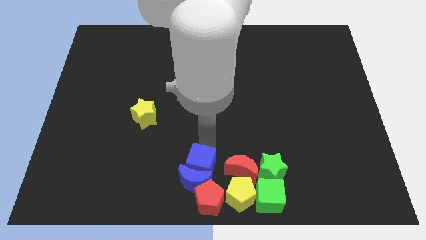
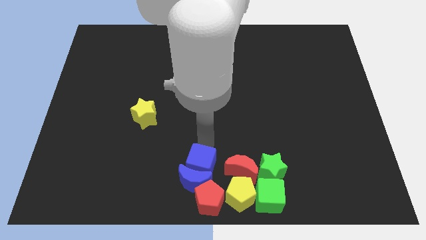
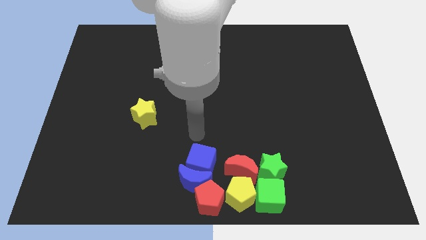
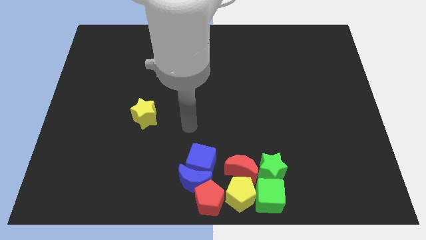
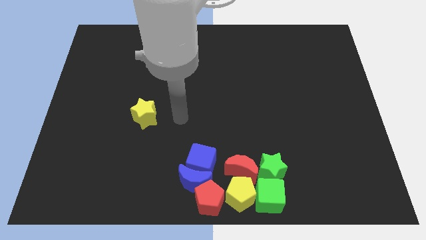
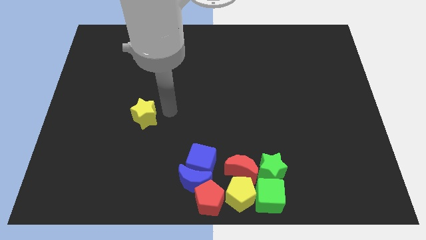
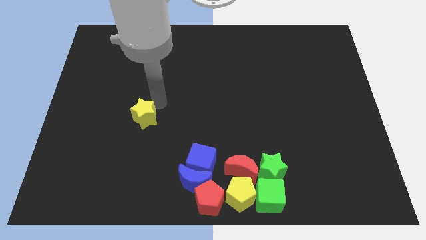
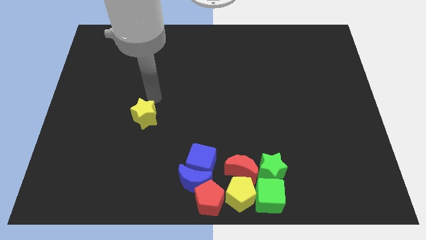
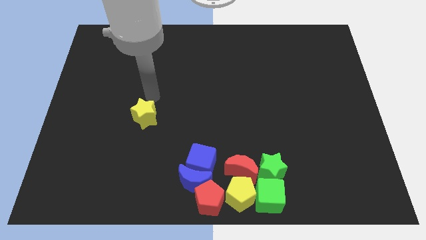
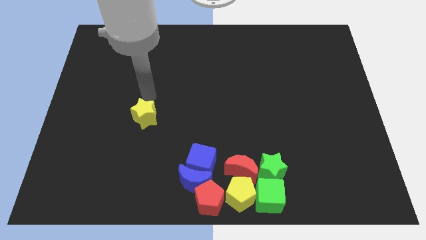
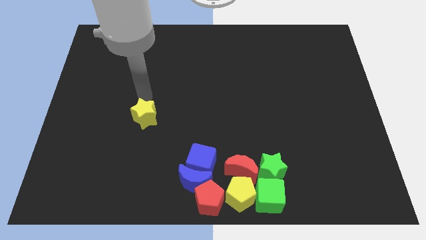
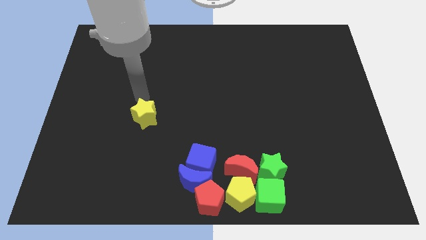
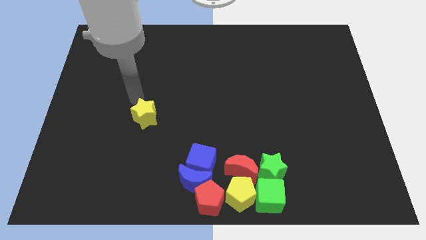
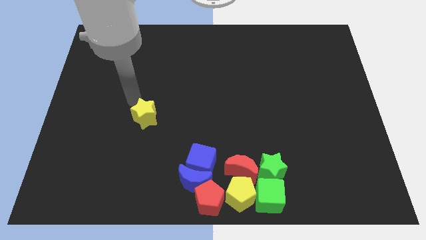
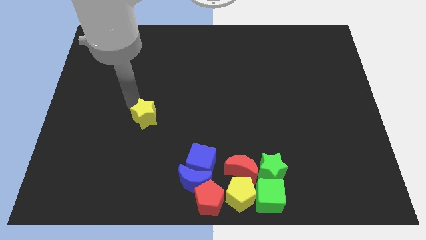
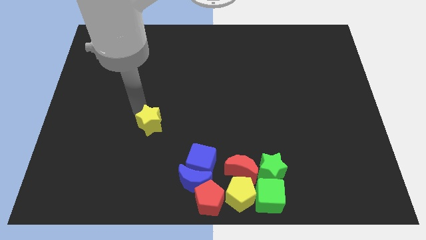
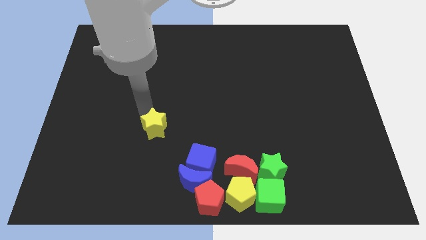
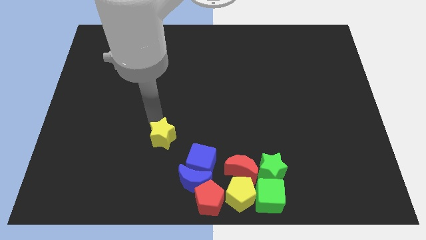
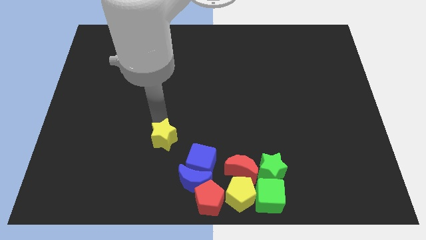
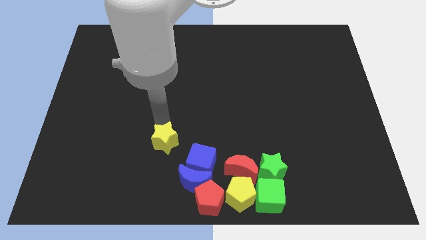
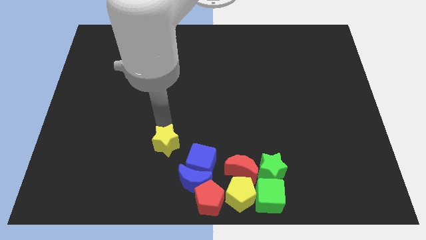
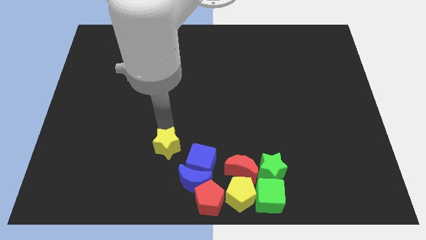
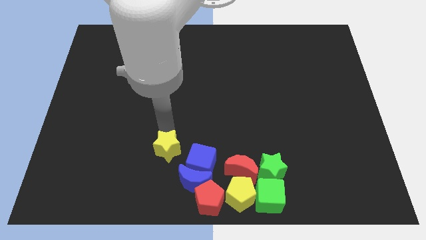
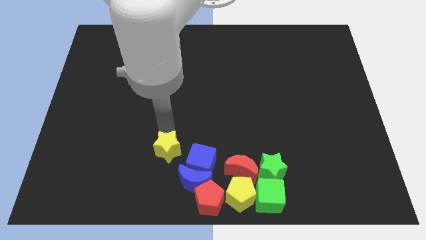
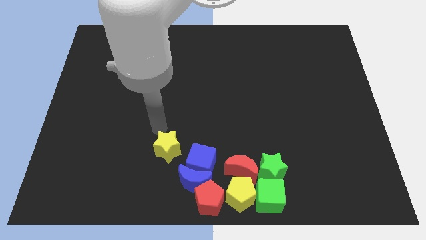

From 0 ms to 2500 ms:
push the yellow star to the left of the blue cube

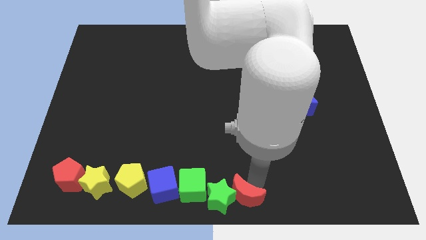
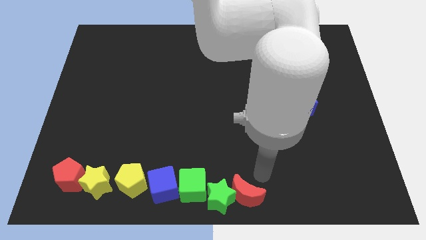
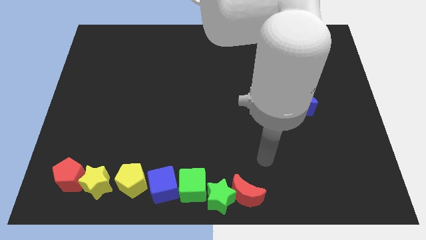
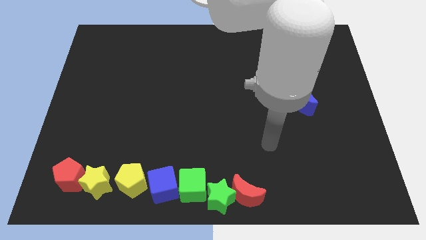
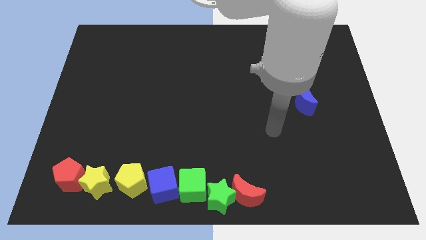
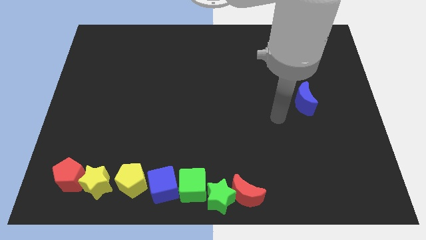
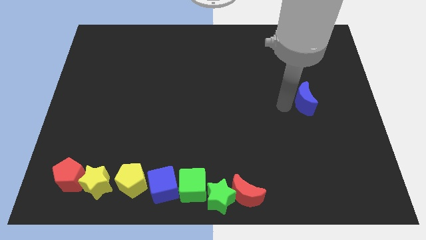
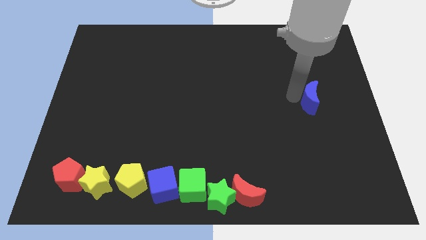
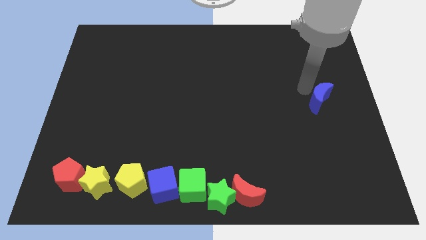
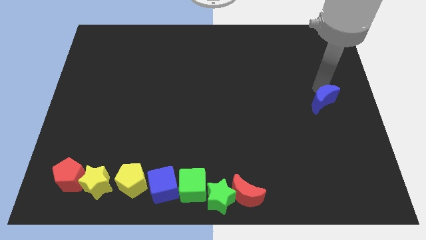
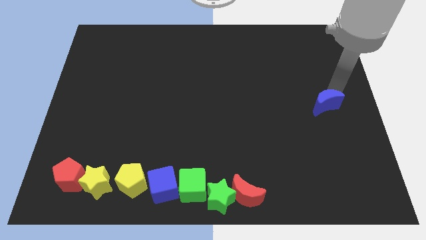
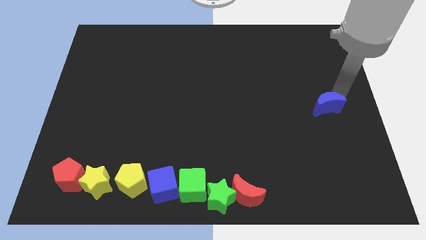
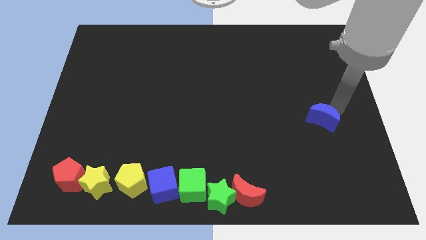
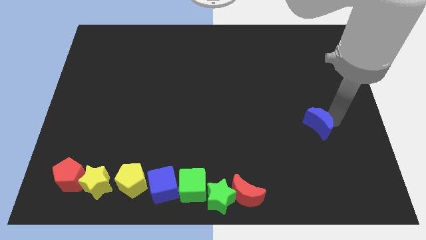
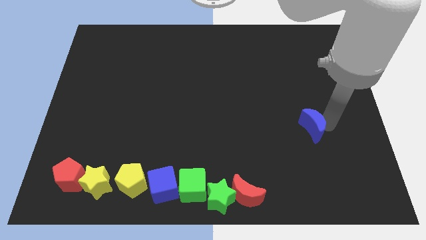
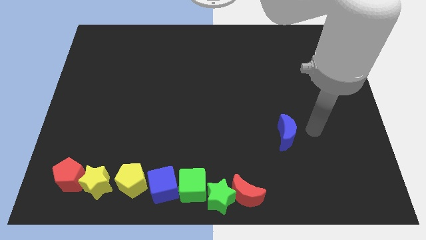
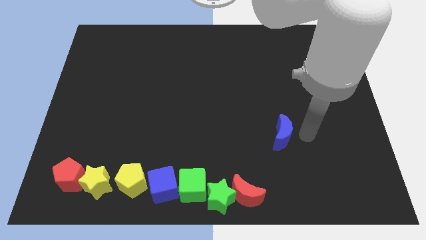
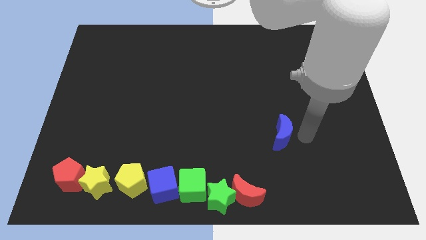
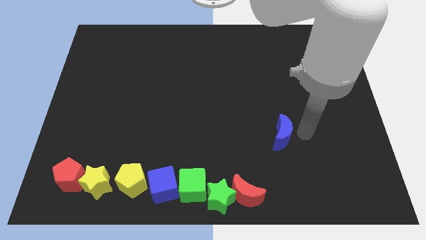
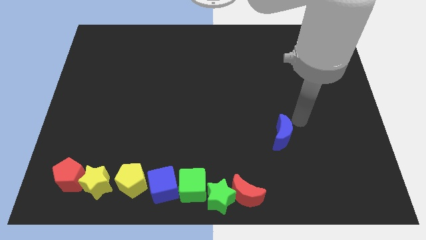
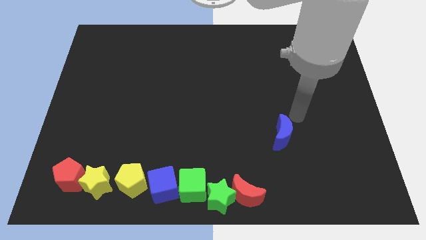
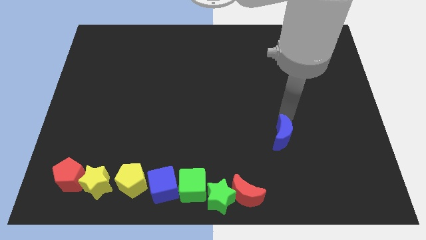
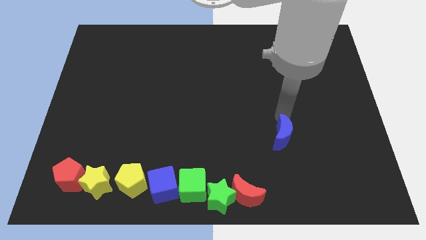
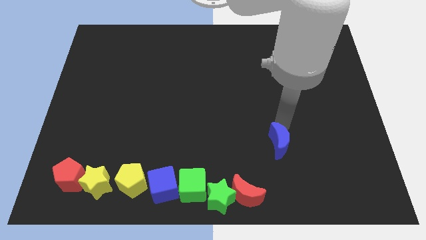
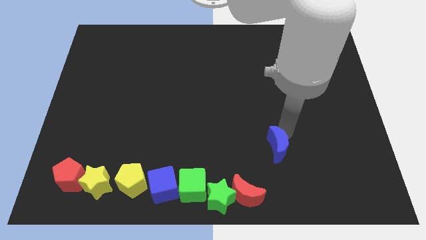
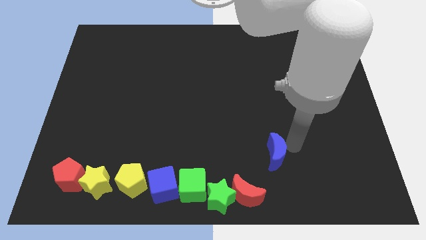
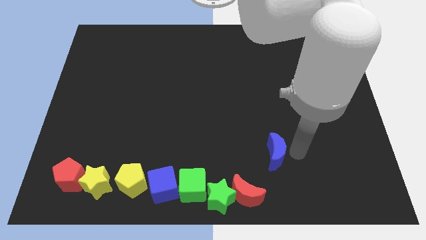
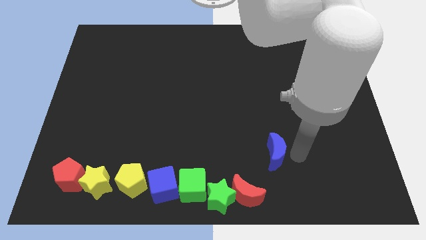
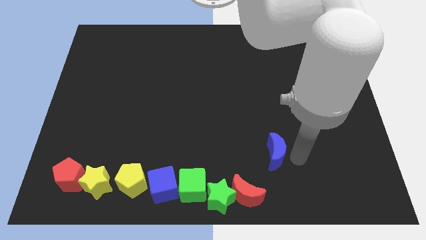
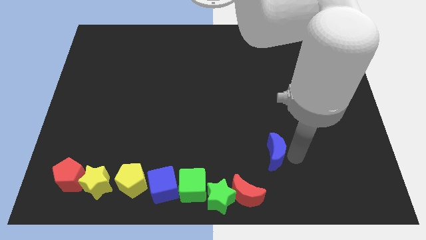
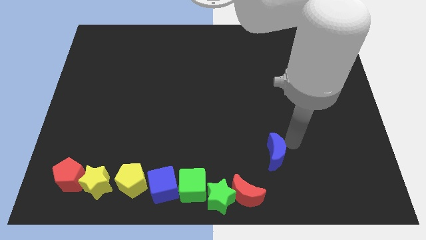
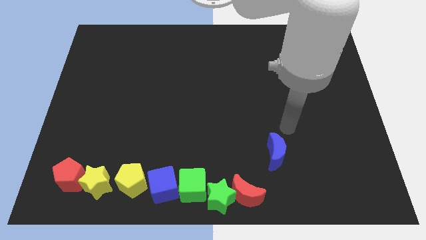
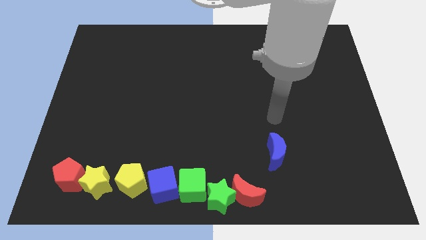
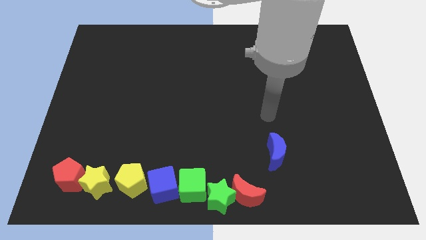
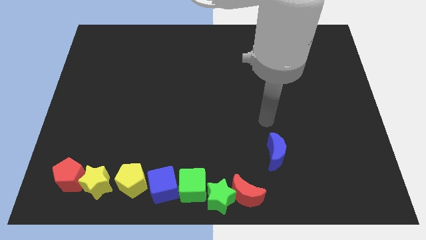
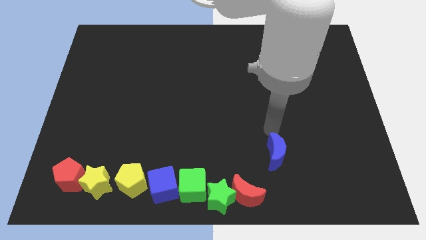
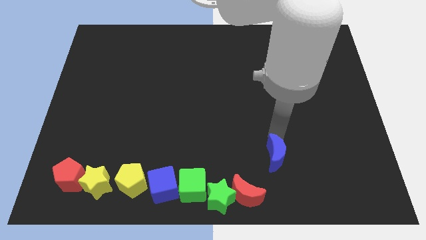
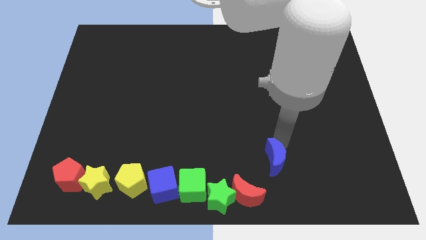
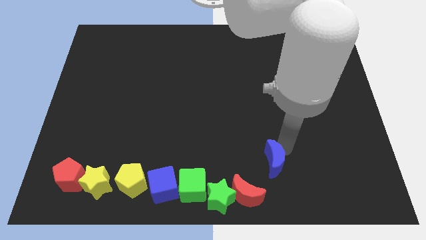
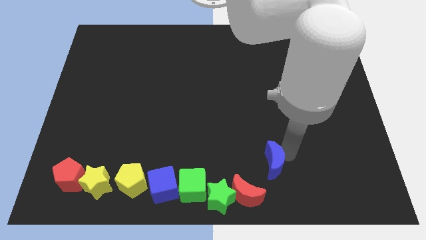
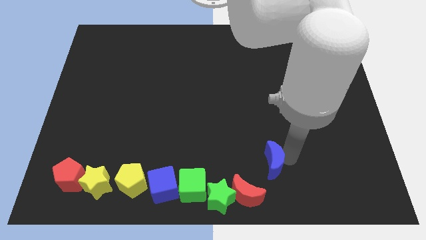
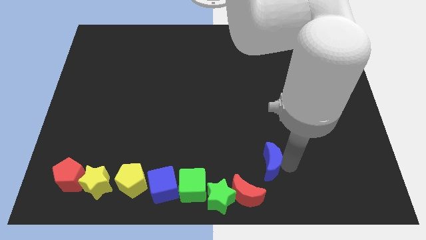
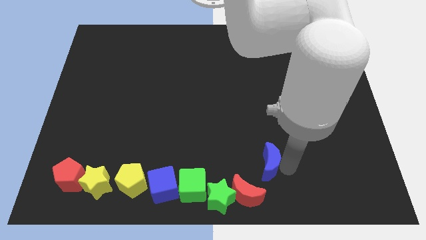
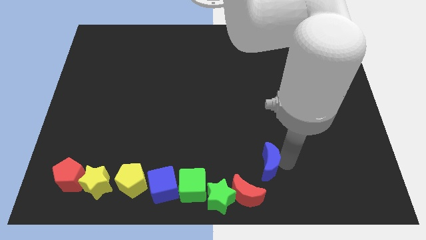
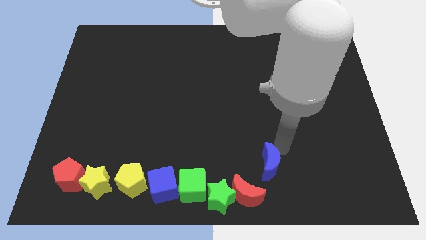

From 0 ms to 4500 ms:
move the blue moon close to the top side of the red crescent

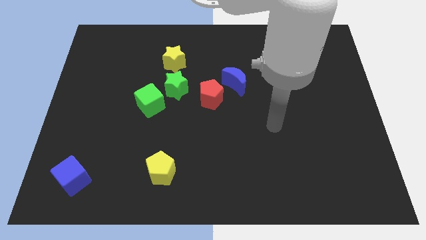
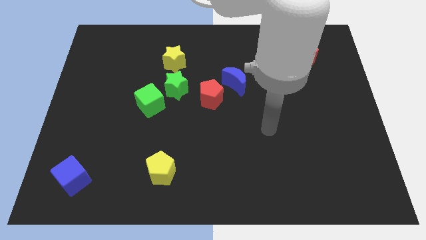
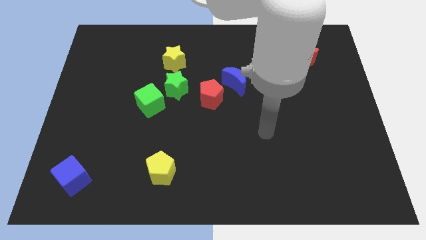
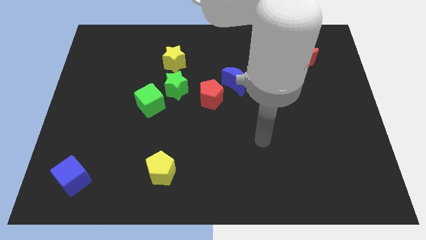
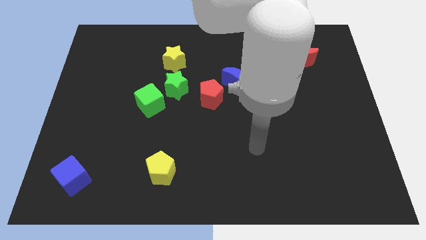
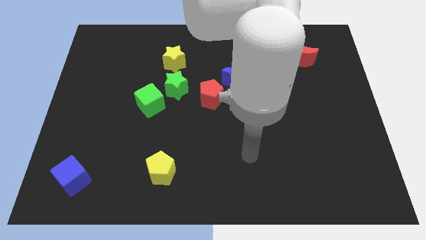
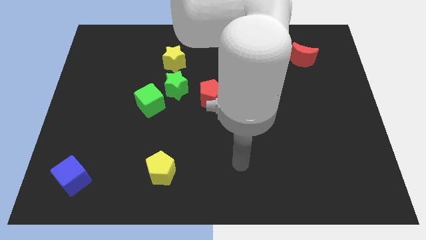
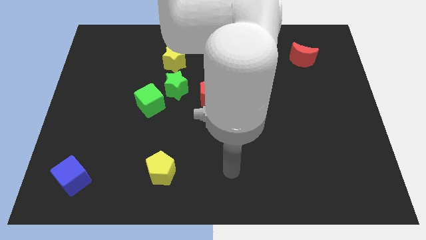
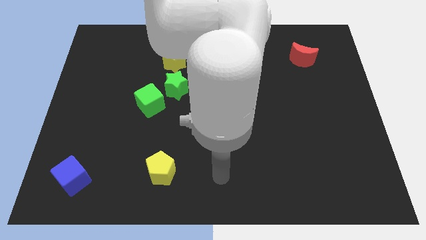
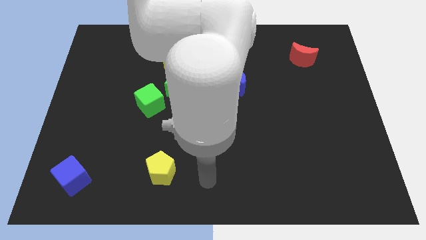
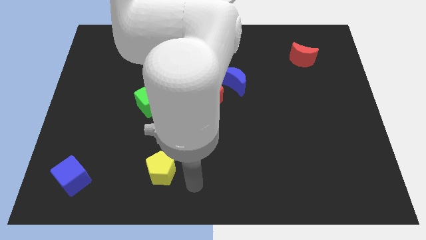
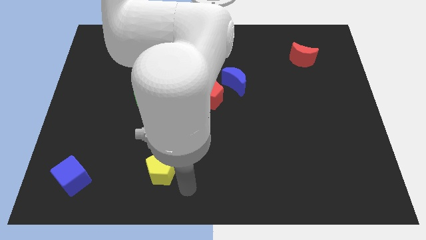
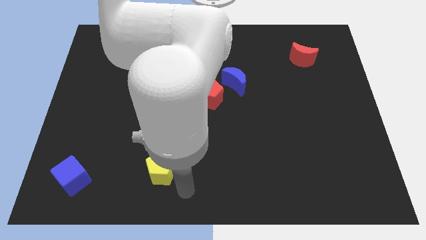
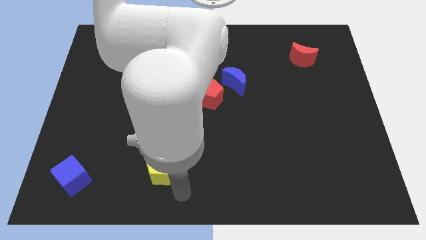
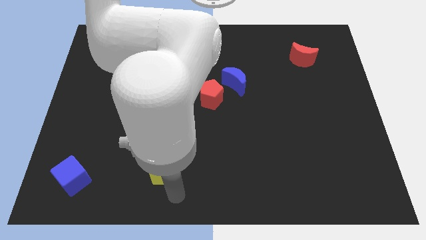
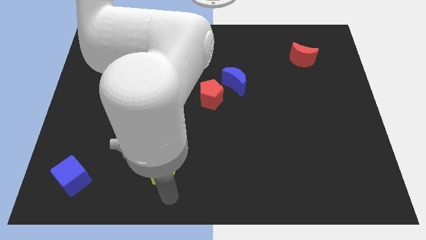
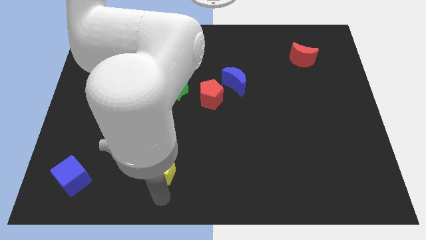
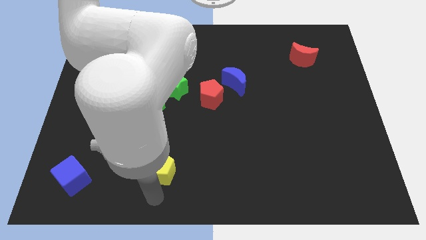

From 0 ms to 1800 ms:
put the arm below the yellow pentagon
